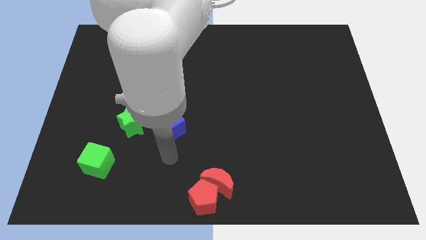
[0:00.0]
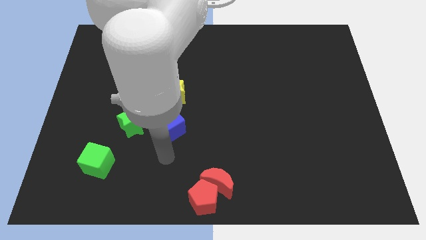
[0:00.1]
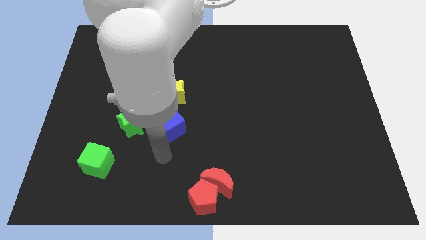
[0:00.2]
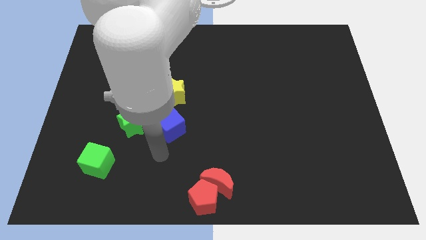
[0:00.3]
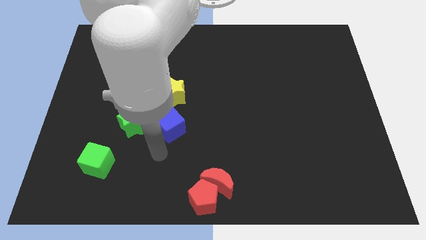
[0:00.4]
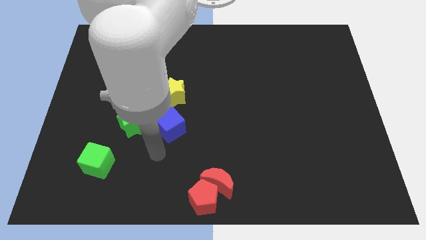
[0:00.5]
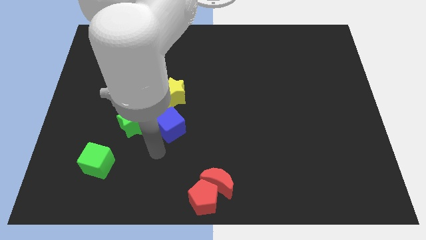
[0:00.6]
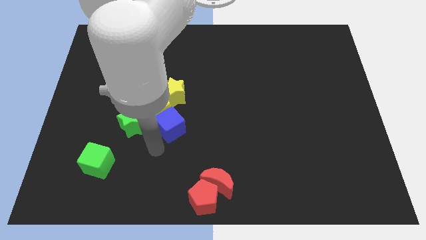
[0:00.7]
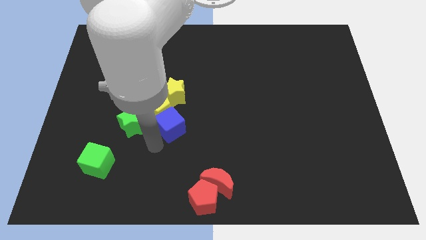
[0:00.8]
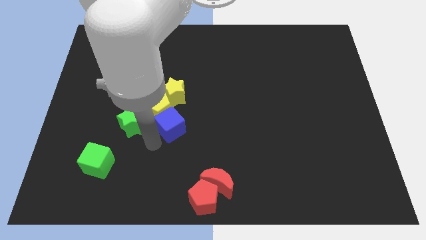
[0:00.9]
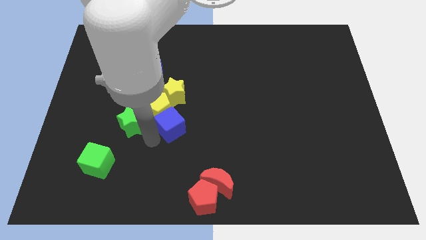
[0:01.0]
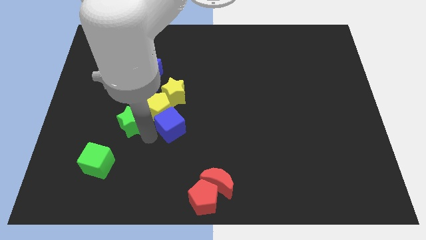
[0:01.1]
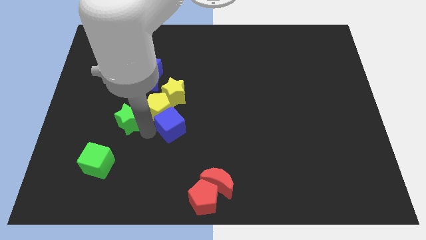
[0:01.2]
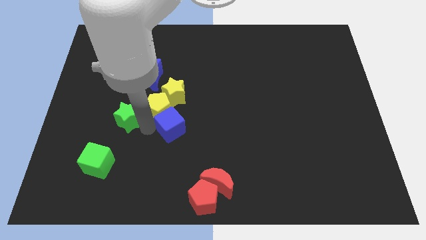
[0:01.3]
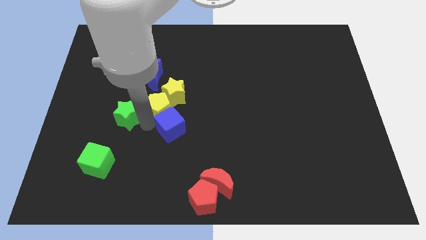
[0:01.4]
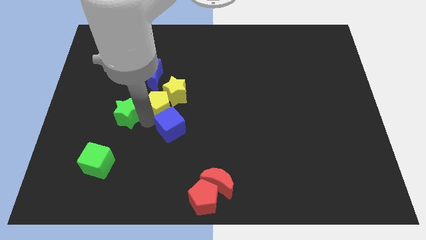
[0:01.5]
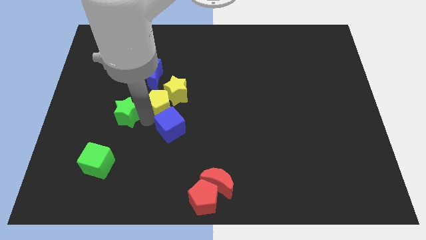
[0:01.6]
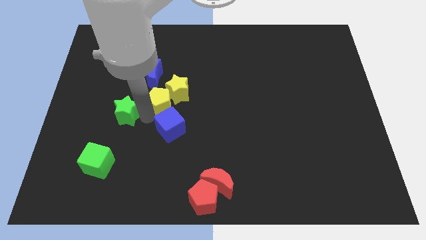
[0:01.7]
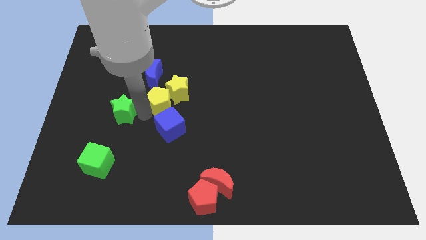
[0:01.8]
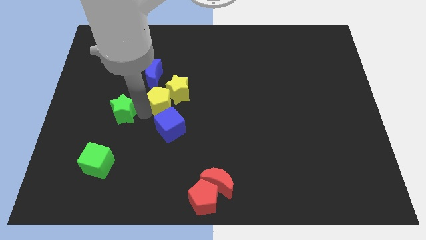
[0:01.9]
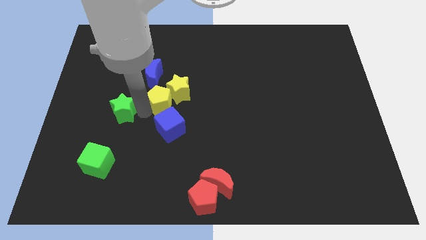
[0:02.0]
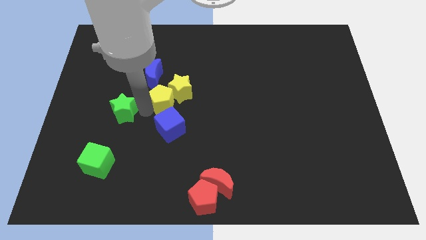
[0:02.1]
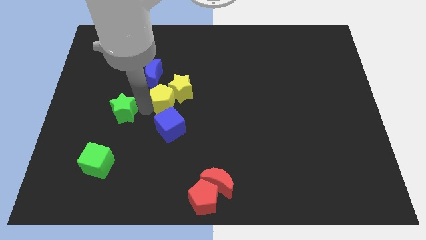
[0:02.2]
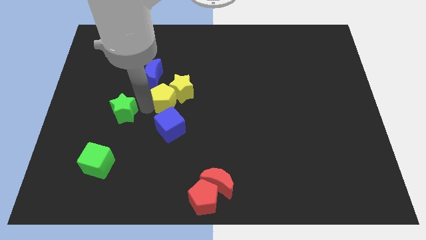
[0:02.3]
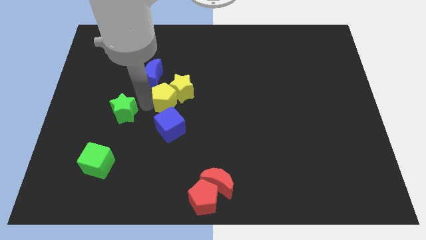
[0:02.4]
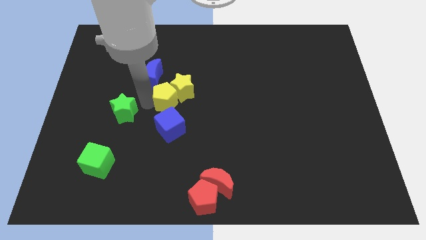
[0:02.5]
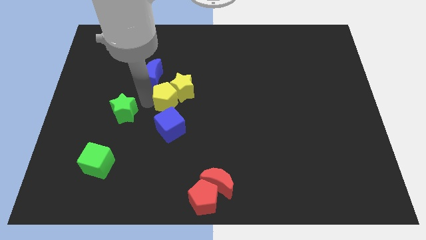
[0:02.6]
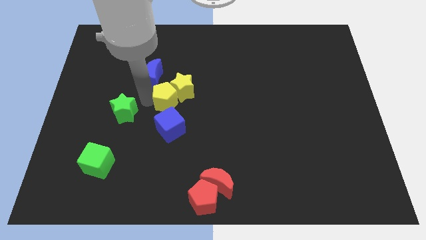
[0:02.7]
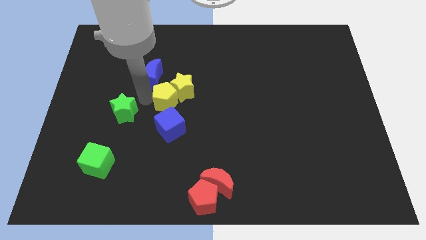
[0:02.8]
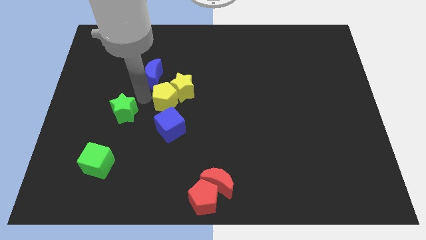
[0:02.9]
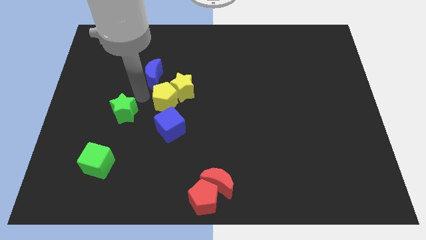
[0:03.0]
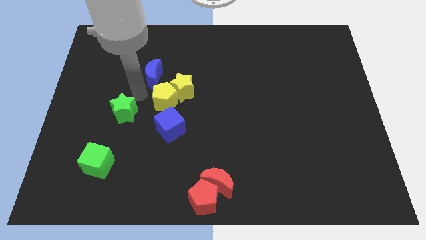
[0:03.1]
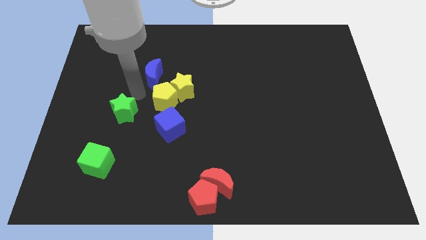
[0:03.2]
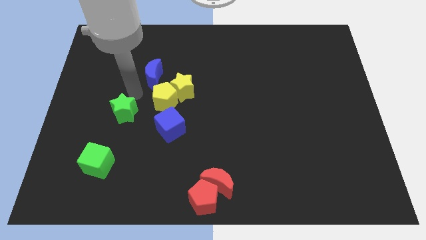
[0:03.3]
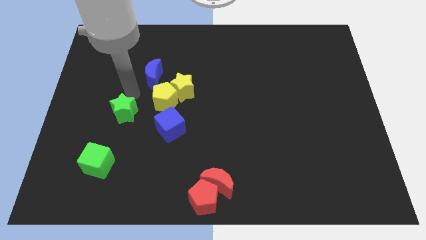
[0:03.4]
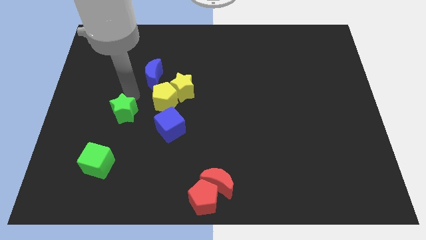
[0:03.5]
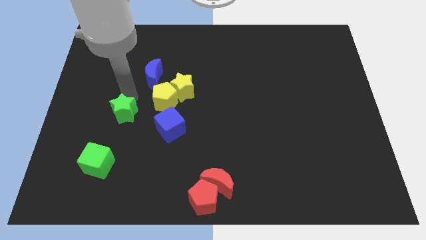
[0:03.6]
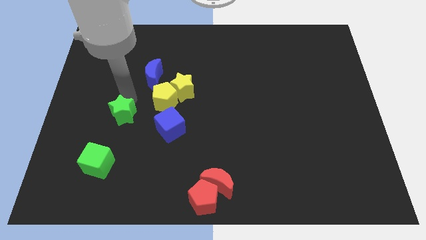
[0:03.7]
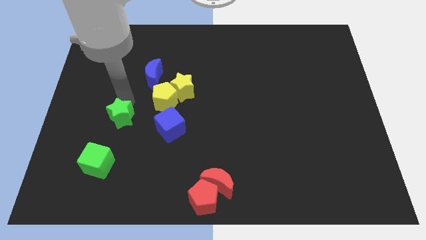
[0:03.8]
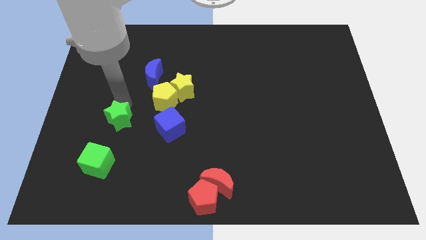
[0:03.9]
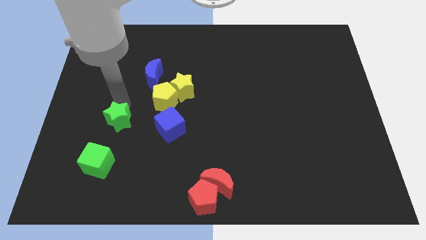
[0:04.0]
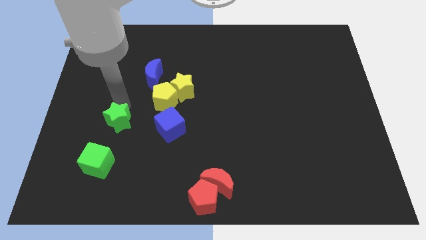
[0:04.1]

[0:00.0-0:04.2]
move green star slightly to the bottom side of the board

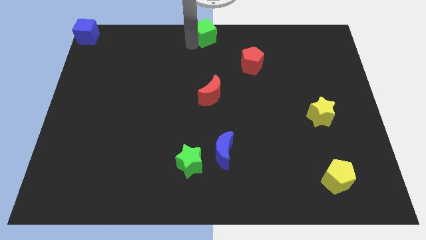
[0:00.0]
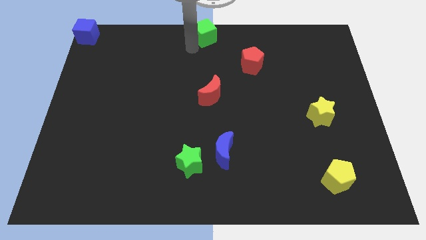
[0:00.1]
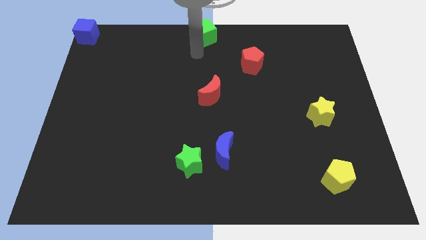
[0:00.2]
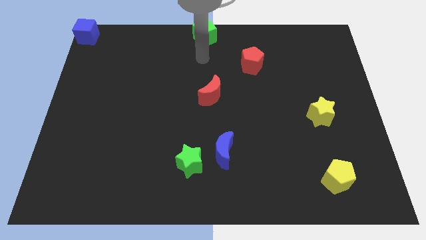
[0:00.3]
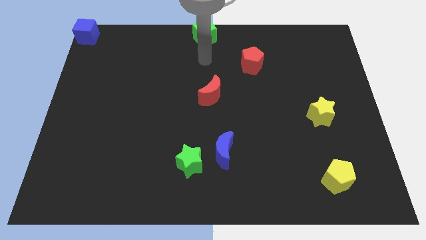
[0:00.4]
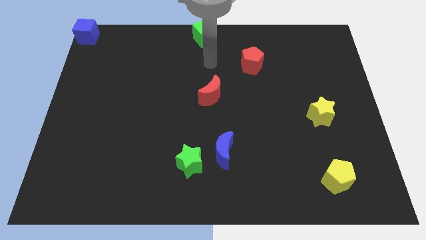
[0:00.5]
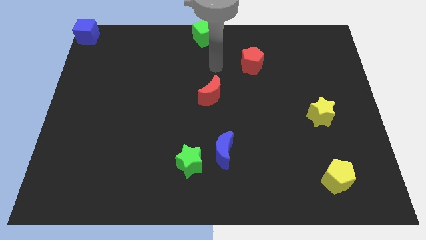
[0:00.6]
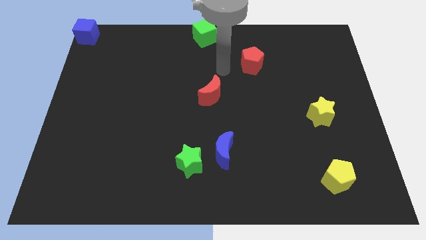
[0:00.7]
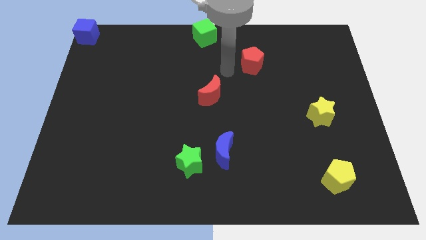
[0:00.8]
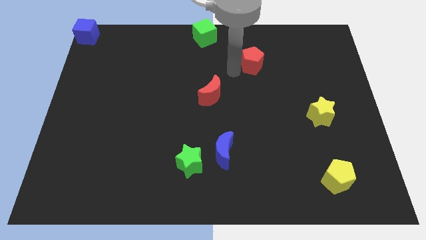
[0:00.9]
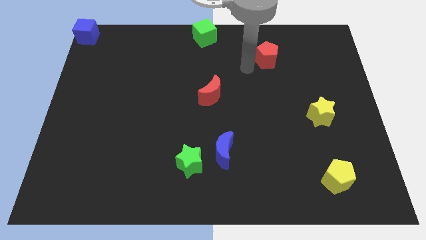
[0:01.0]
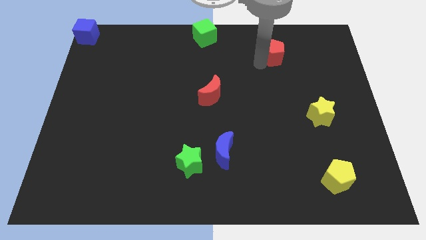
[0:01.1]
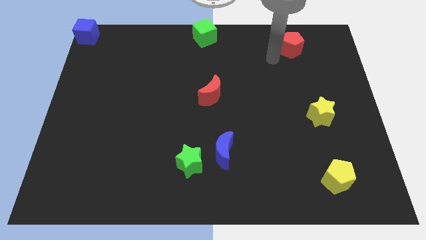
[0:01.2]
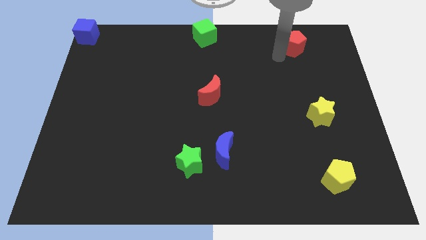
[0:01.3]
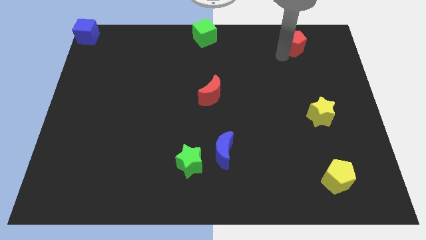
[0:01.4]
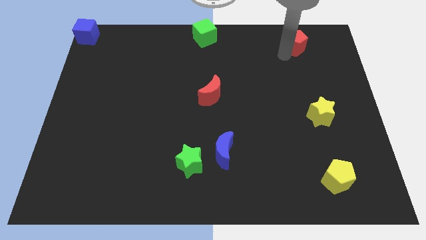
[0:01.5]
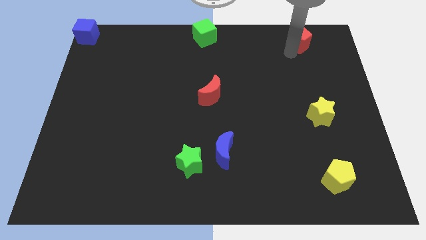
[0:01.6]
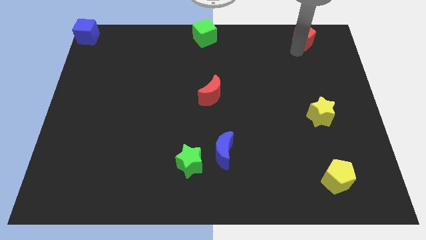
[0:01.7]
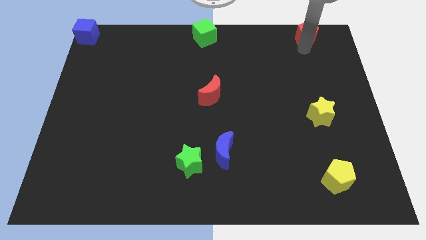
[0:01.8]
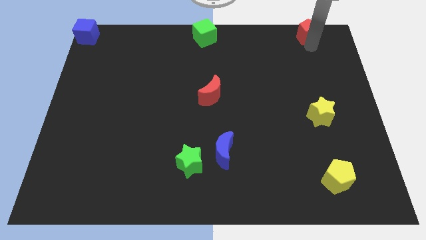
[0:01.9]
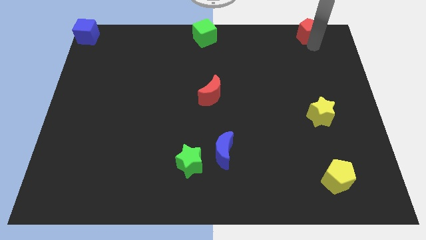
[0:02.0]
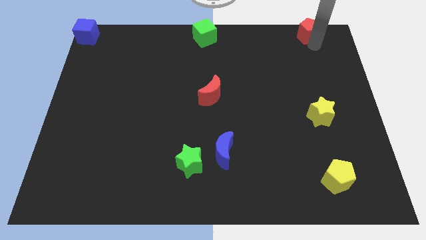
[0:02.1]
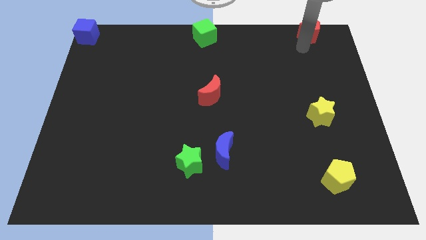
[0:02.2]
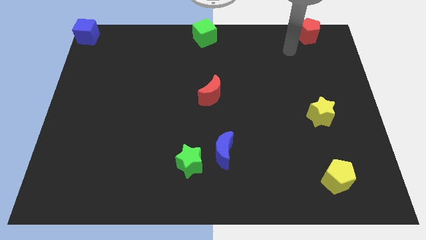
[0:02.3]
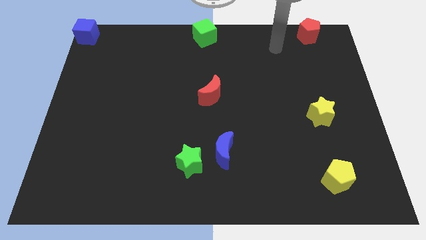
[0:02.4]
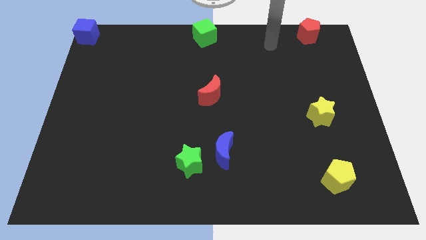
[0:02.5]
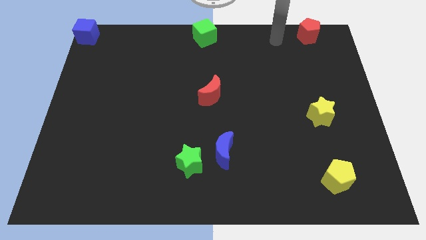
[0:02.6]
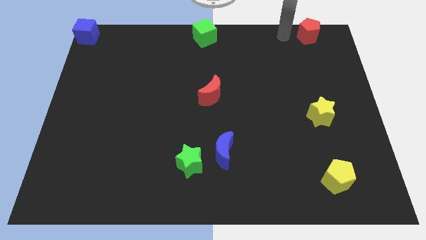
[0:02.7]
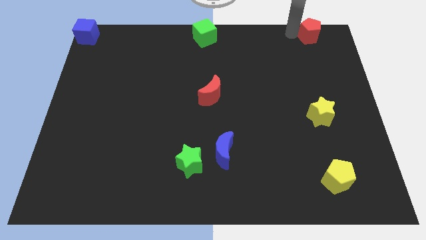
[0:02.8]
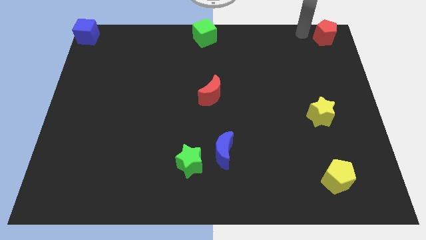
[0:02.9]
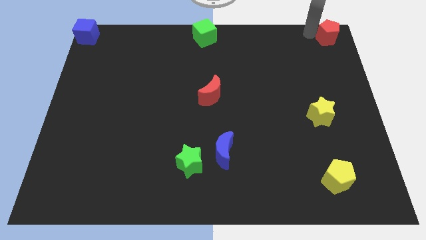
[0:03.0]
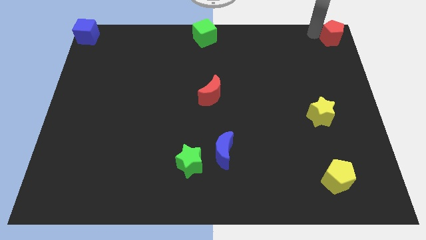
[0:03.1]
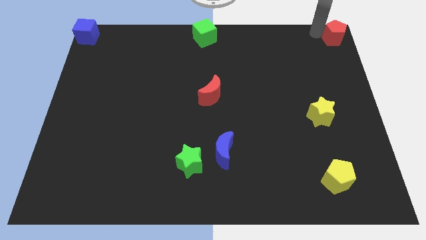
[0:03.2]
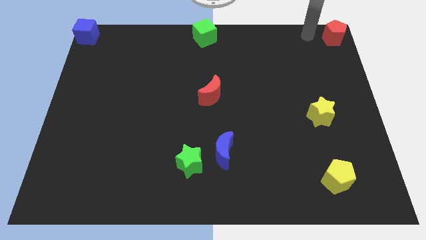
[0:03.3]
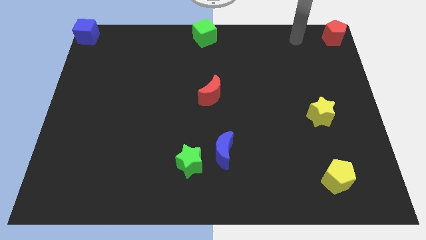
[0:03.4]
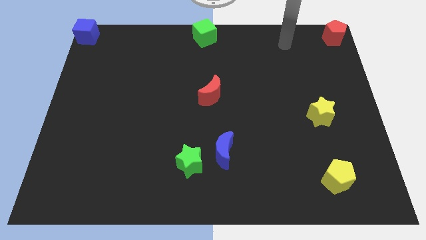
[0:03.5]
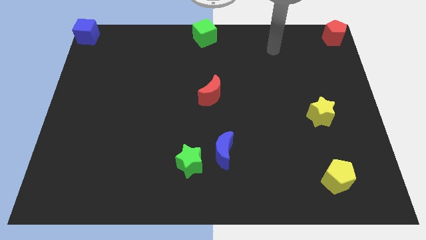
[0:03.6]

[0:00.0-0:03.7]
push the red pentagon to the top right corner of the board

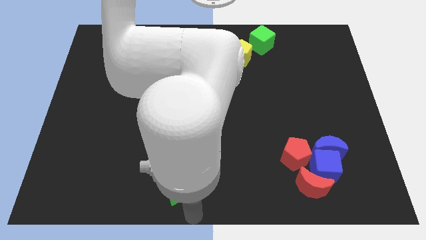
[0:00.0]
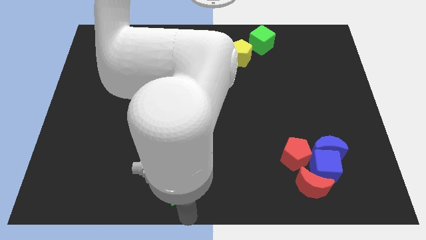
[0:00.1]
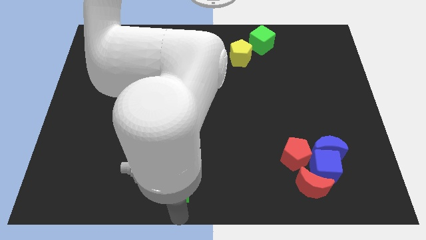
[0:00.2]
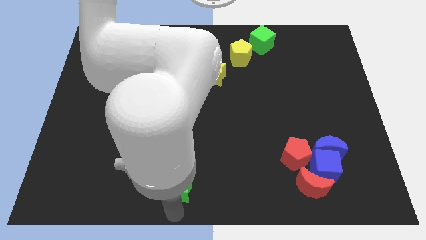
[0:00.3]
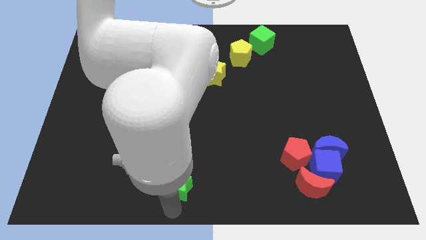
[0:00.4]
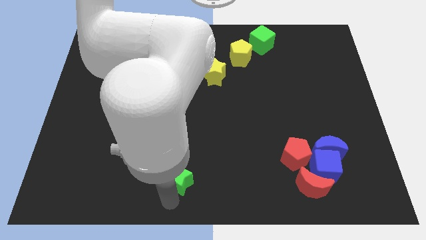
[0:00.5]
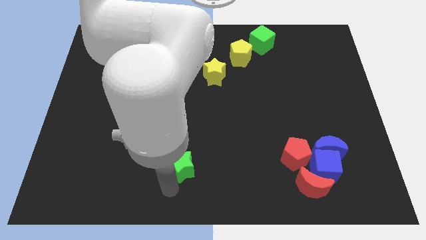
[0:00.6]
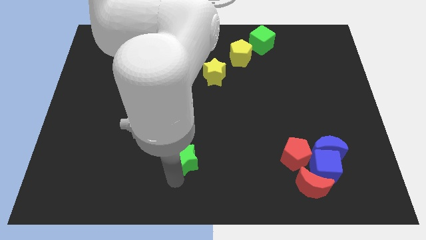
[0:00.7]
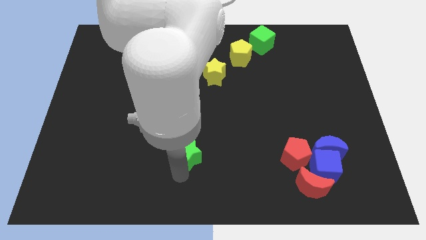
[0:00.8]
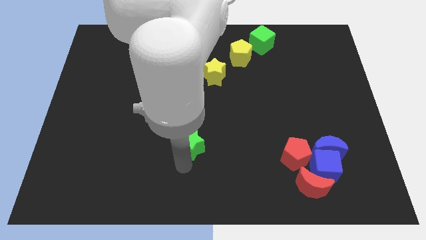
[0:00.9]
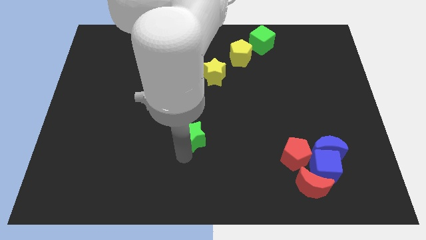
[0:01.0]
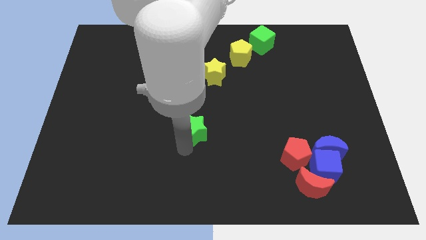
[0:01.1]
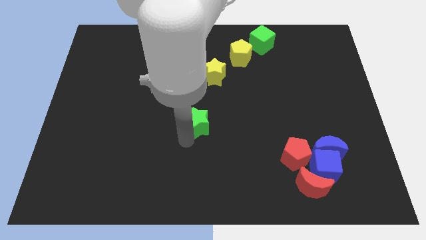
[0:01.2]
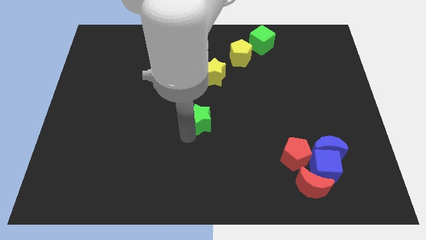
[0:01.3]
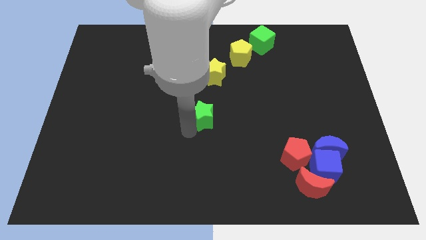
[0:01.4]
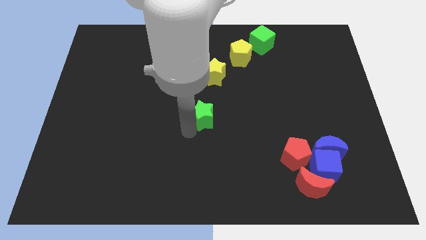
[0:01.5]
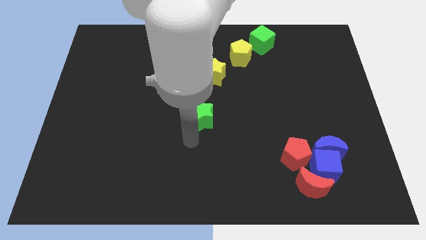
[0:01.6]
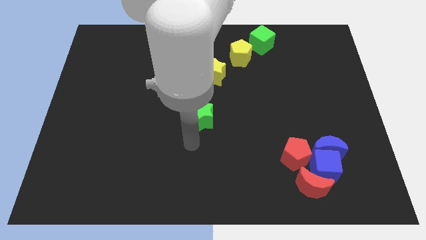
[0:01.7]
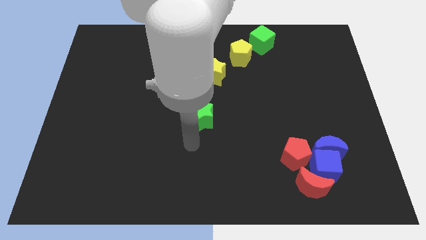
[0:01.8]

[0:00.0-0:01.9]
move the green star towards the center of the board
